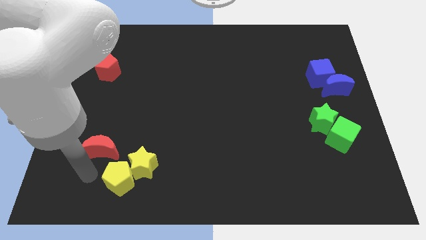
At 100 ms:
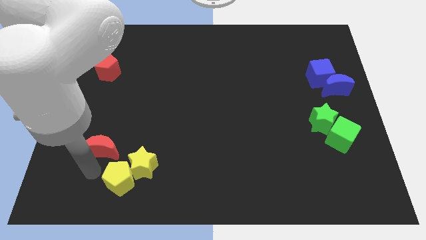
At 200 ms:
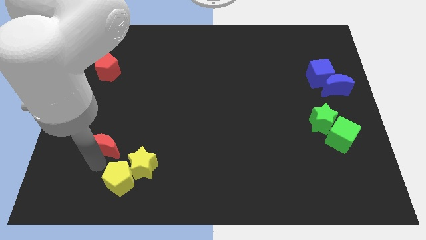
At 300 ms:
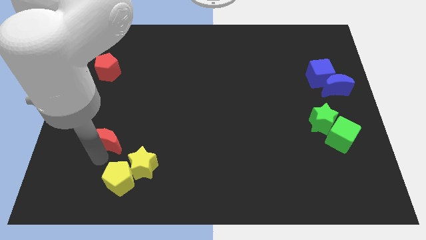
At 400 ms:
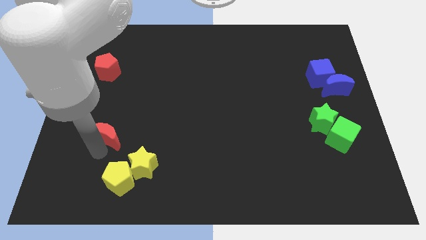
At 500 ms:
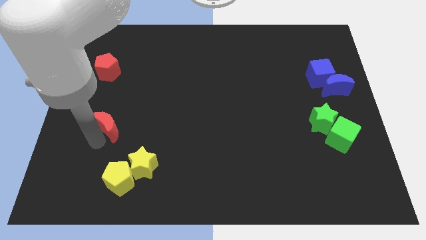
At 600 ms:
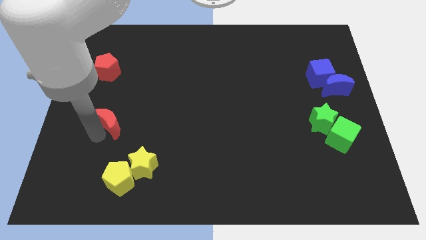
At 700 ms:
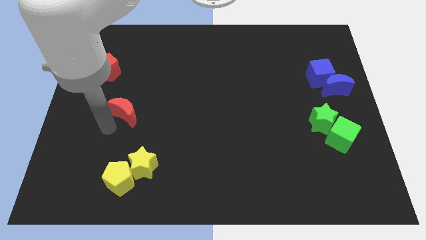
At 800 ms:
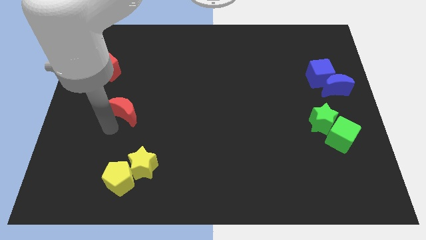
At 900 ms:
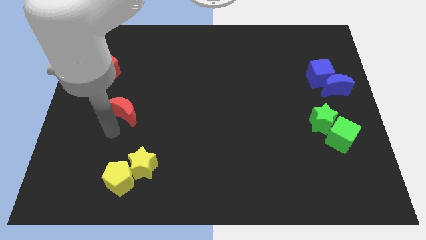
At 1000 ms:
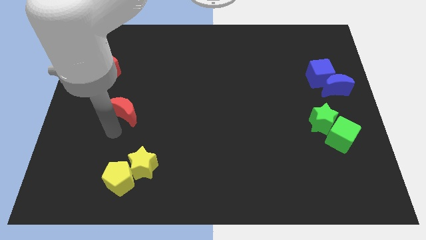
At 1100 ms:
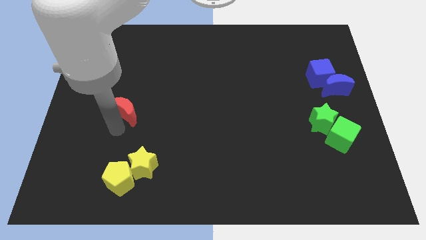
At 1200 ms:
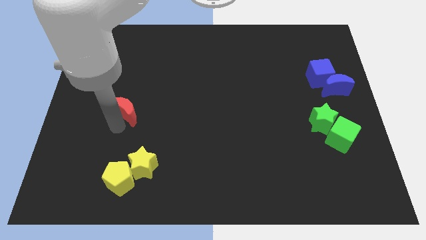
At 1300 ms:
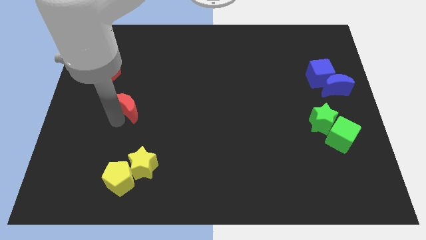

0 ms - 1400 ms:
push the red moon to the center left

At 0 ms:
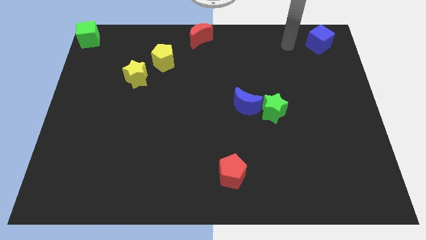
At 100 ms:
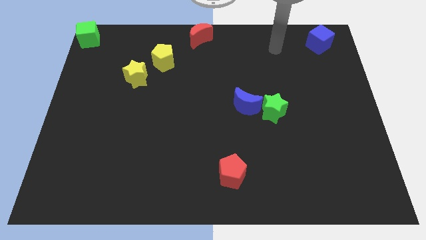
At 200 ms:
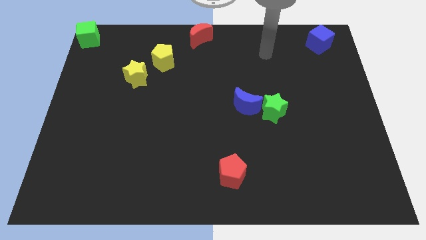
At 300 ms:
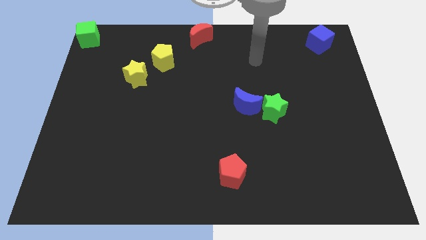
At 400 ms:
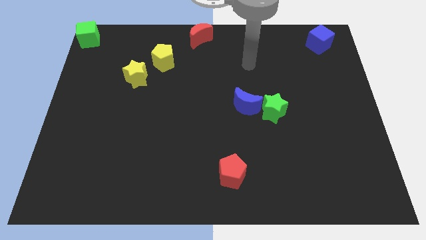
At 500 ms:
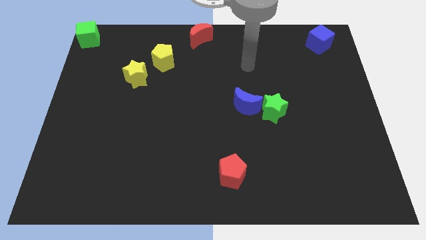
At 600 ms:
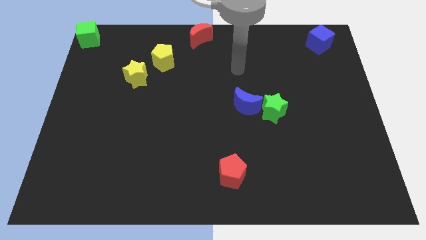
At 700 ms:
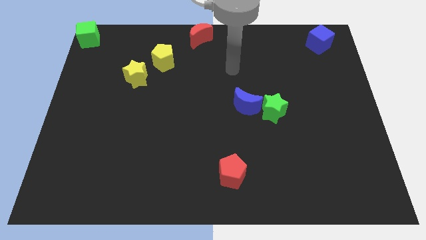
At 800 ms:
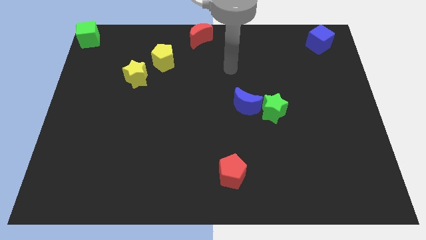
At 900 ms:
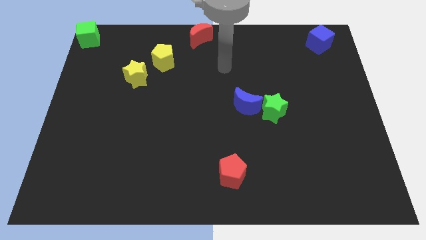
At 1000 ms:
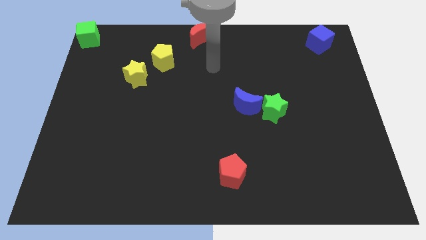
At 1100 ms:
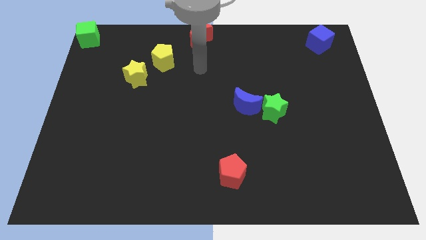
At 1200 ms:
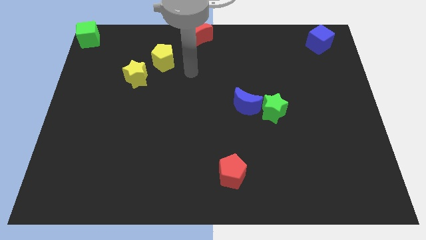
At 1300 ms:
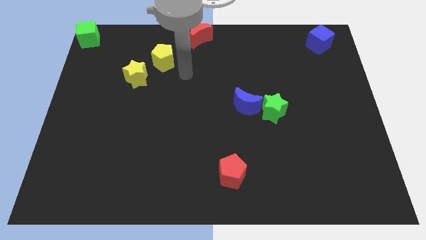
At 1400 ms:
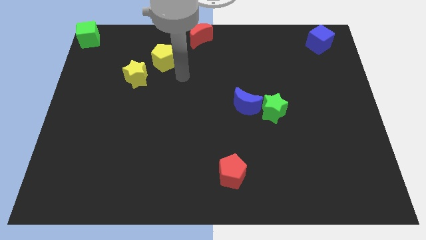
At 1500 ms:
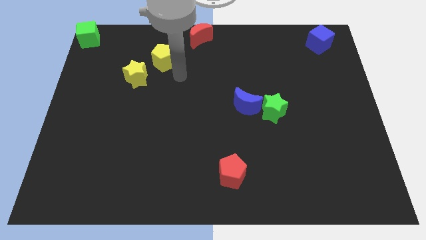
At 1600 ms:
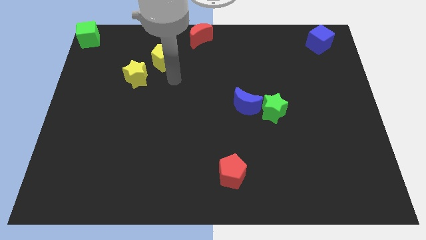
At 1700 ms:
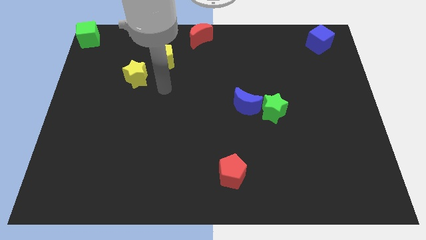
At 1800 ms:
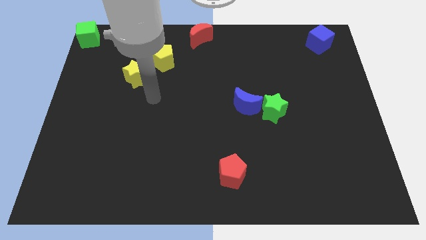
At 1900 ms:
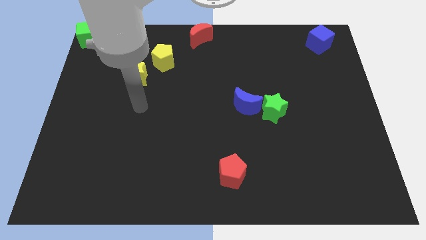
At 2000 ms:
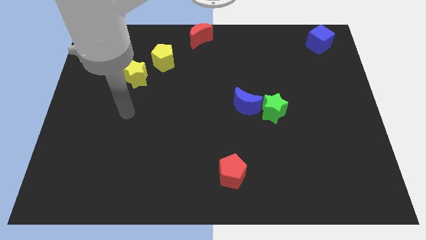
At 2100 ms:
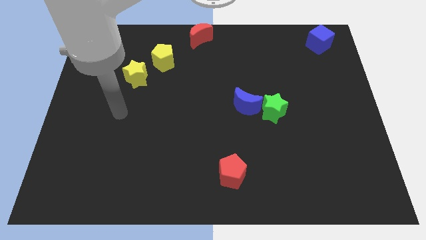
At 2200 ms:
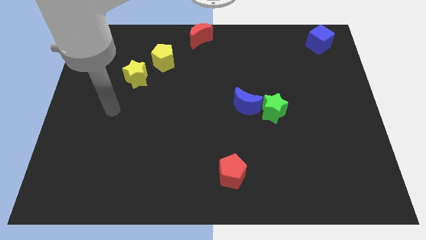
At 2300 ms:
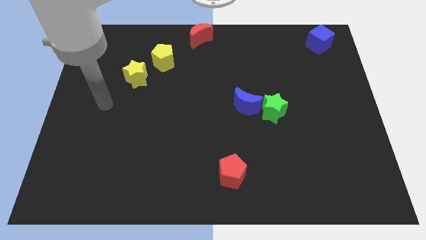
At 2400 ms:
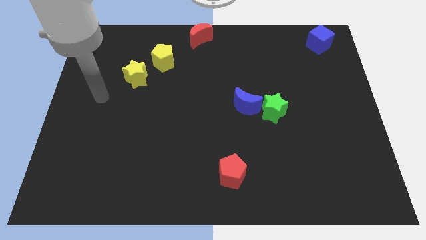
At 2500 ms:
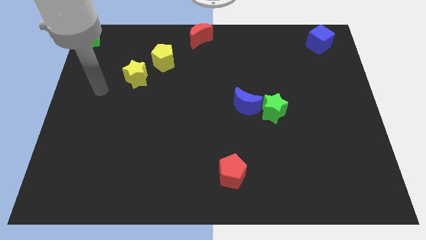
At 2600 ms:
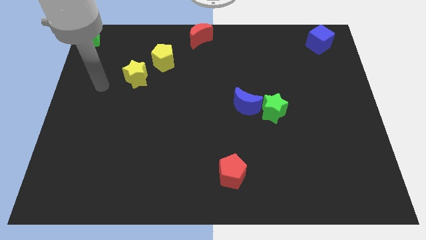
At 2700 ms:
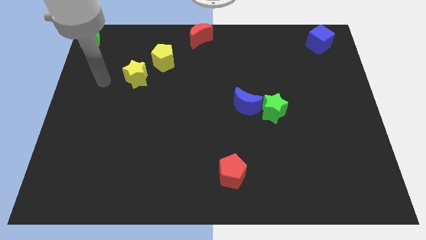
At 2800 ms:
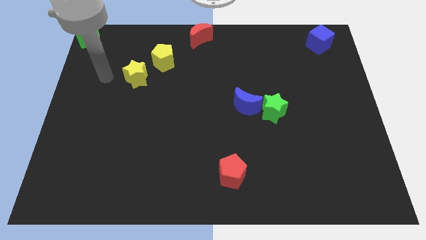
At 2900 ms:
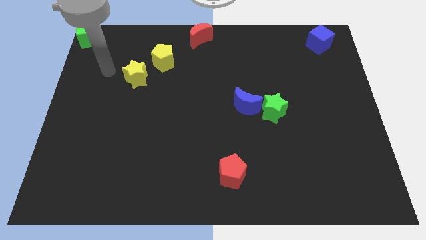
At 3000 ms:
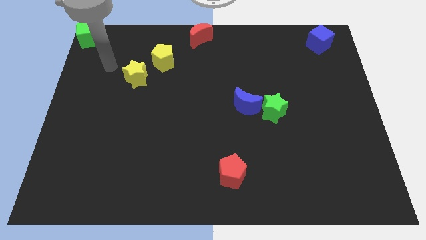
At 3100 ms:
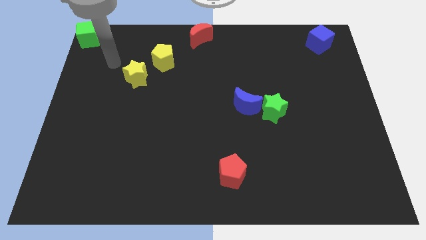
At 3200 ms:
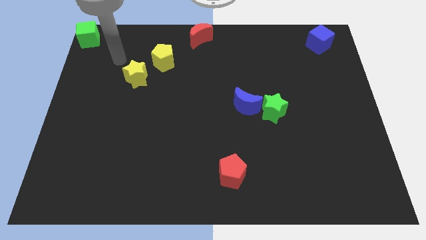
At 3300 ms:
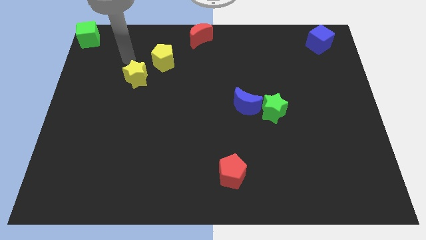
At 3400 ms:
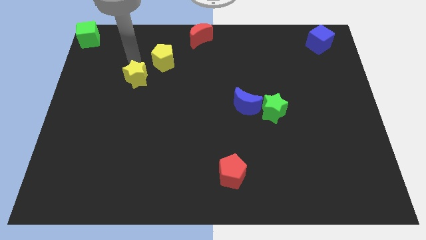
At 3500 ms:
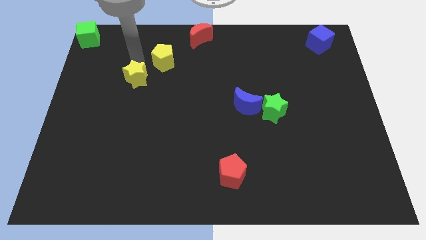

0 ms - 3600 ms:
place the arm above the yellow star

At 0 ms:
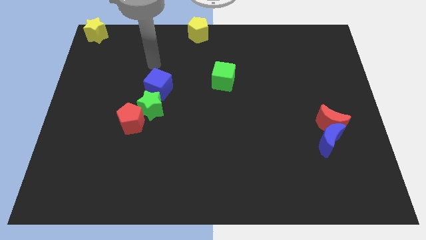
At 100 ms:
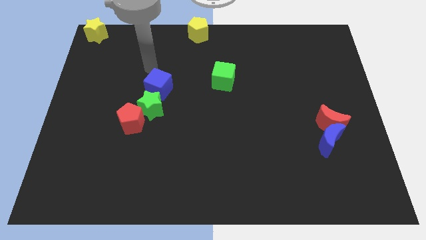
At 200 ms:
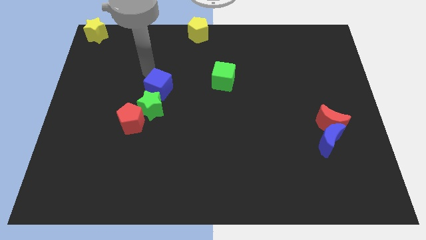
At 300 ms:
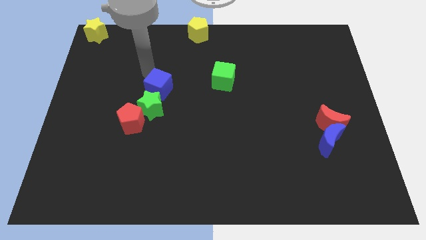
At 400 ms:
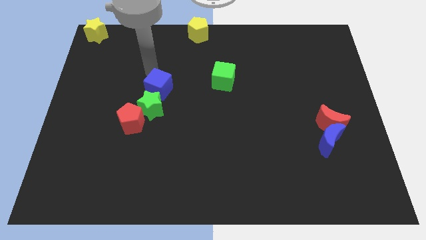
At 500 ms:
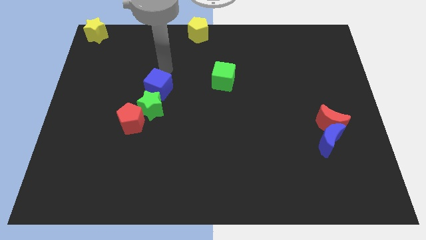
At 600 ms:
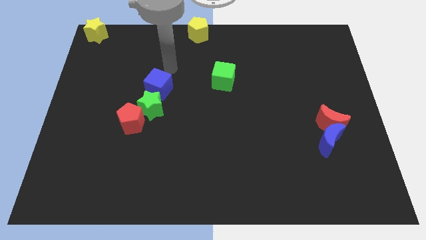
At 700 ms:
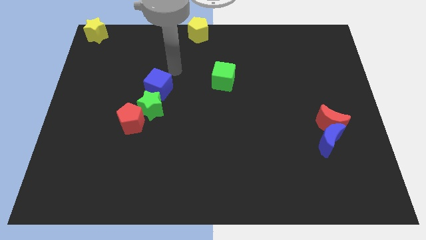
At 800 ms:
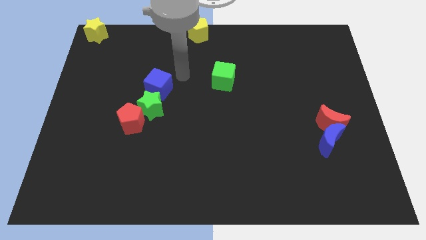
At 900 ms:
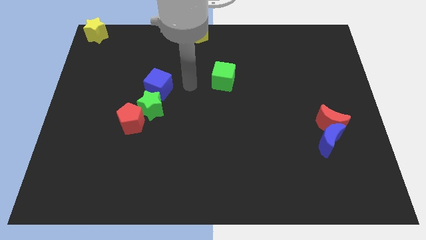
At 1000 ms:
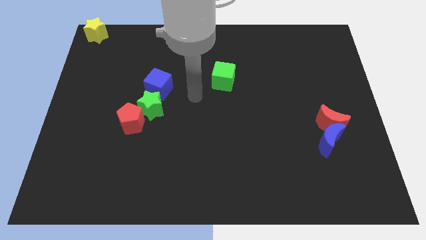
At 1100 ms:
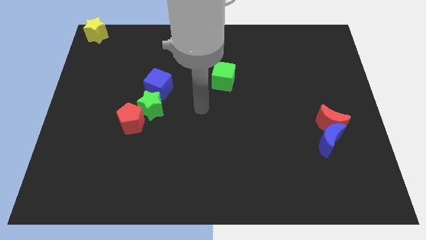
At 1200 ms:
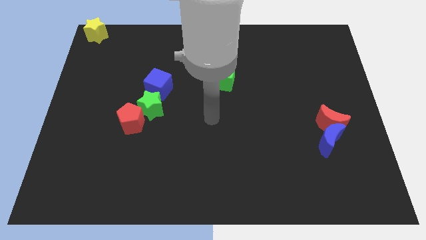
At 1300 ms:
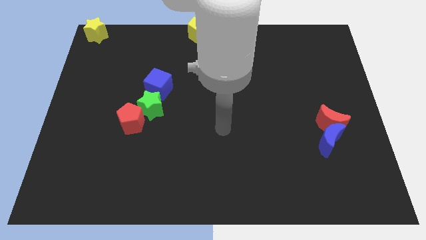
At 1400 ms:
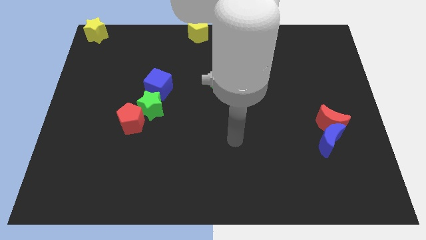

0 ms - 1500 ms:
move your arm to the center of the board

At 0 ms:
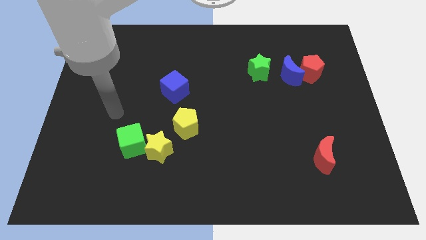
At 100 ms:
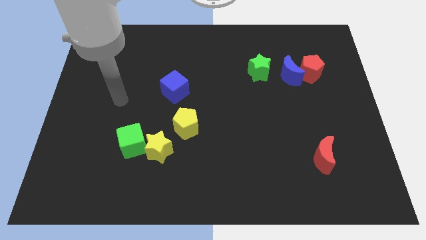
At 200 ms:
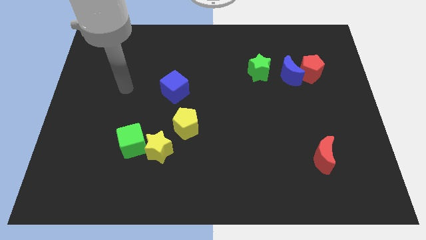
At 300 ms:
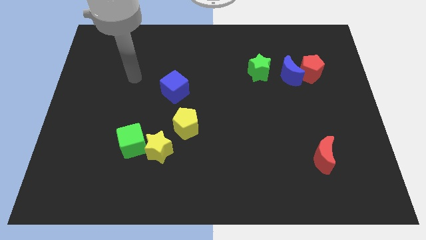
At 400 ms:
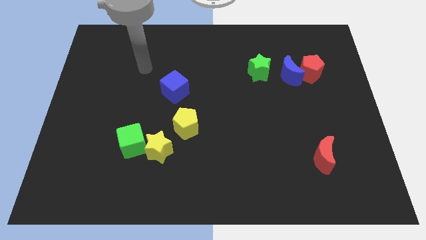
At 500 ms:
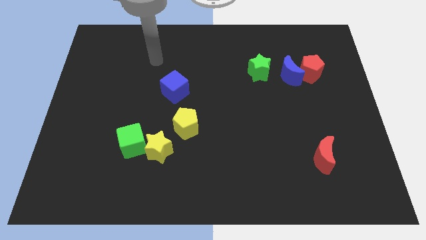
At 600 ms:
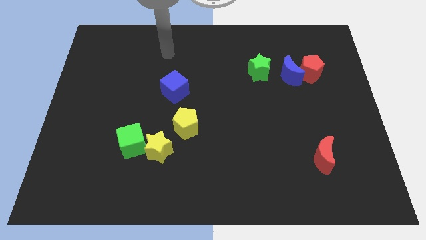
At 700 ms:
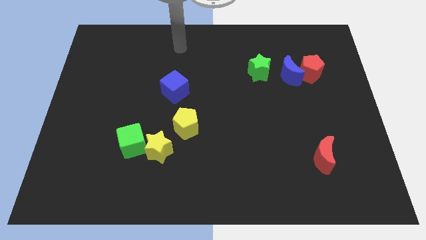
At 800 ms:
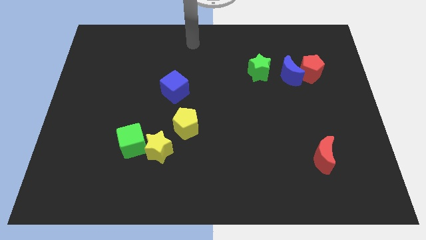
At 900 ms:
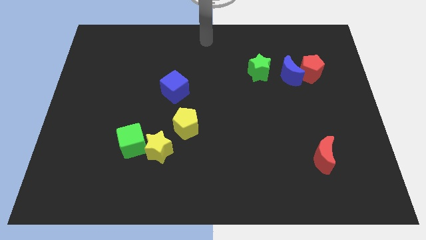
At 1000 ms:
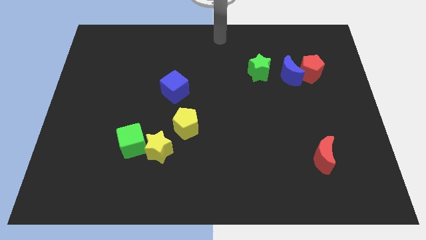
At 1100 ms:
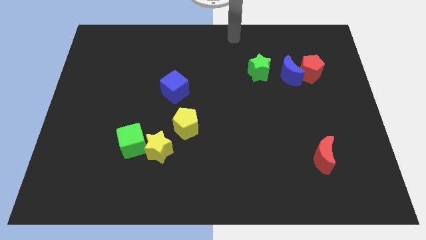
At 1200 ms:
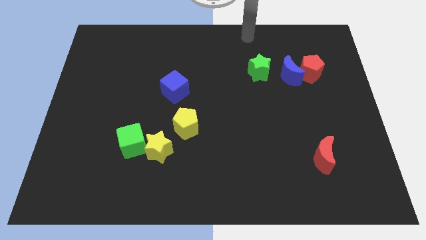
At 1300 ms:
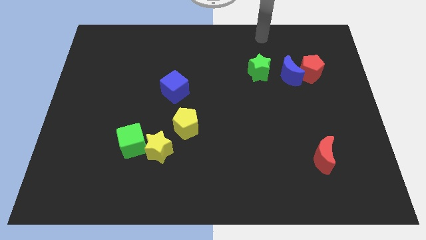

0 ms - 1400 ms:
move your arm to the top of the green star

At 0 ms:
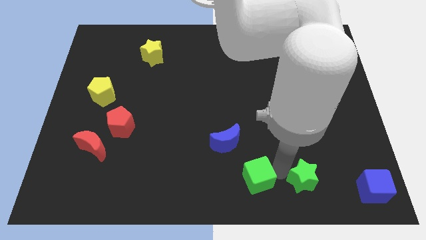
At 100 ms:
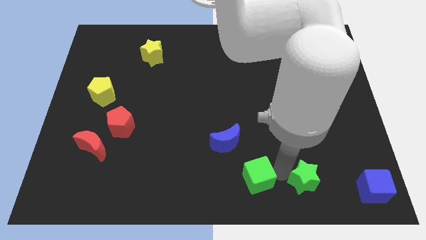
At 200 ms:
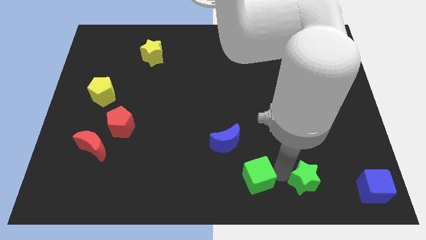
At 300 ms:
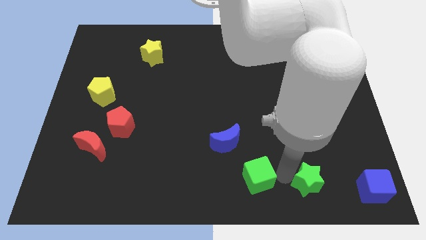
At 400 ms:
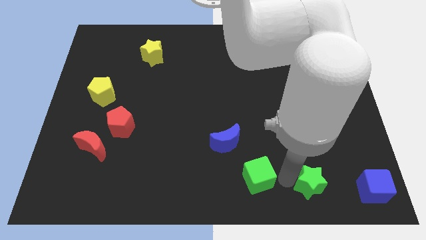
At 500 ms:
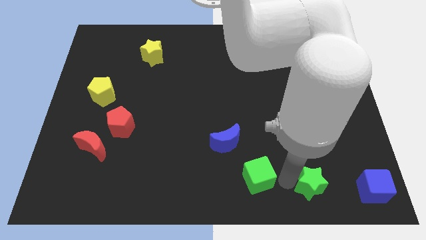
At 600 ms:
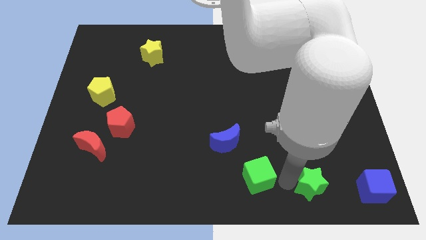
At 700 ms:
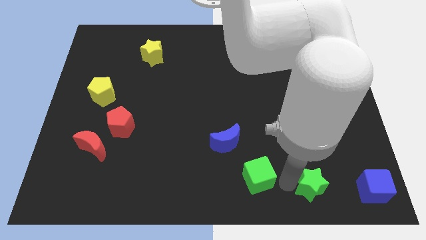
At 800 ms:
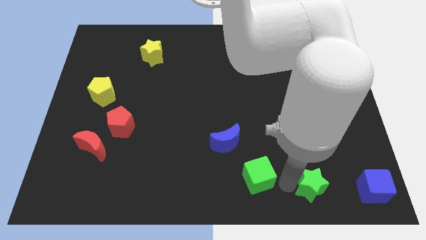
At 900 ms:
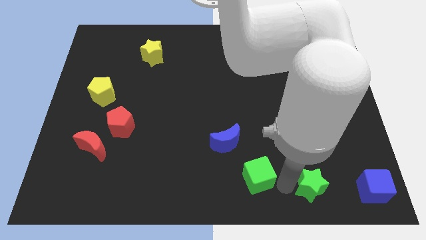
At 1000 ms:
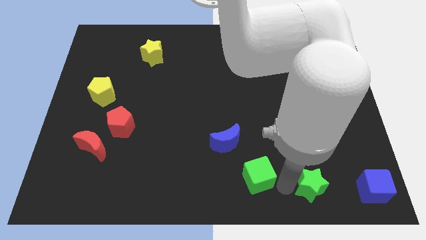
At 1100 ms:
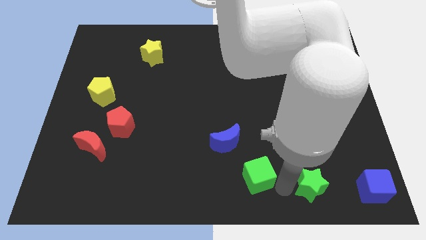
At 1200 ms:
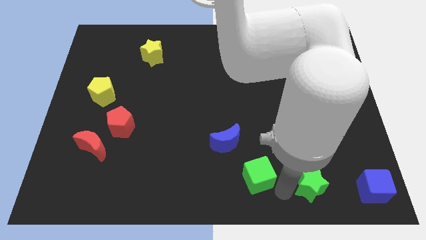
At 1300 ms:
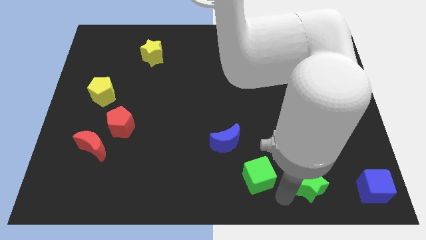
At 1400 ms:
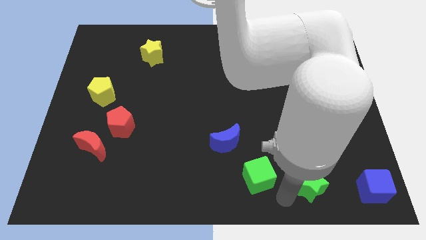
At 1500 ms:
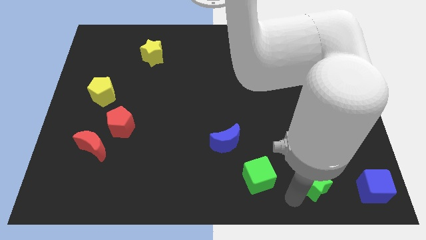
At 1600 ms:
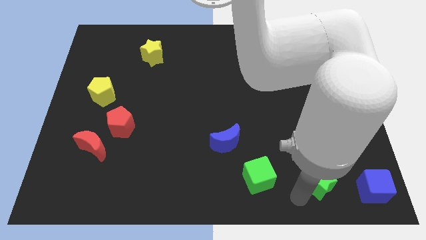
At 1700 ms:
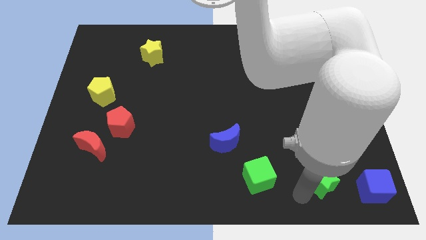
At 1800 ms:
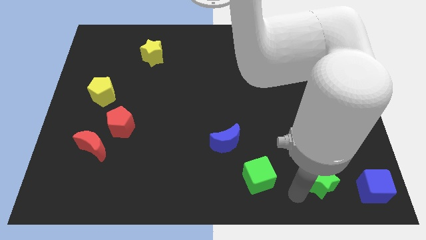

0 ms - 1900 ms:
push the green star towards the blue cube
